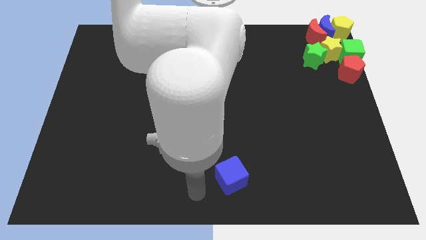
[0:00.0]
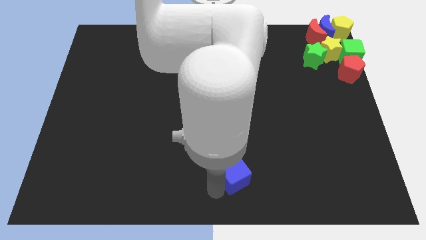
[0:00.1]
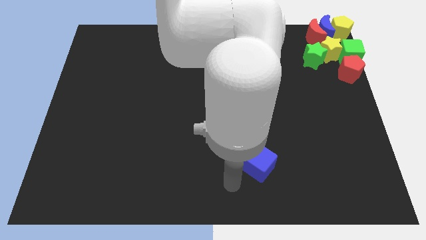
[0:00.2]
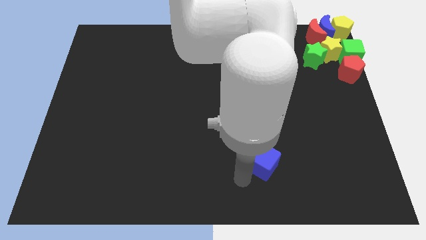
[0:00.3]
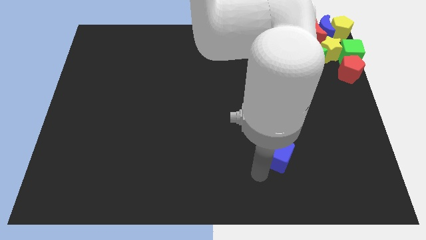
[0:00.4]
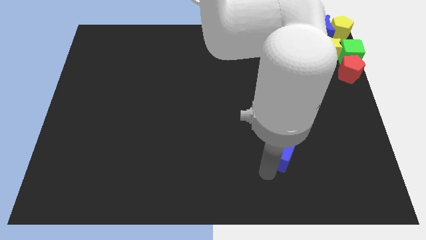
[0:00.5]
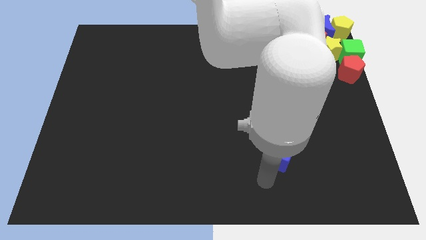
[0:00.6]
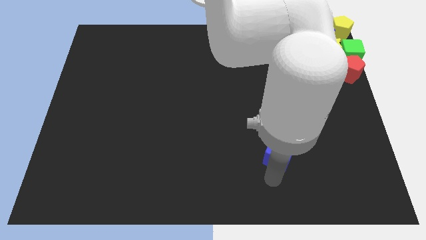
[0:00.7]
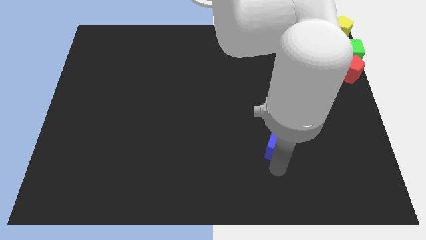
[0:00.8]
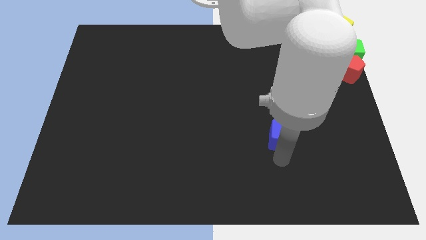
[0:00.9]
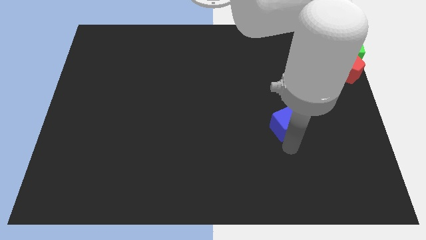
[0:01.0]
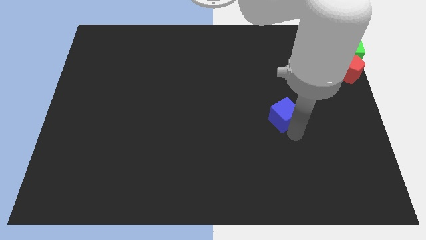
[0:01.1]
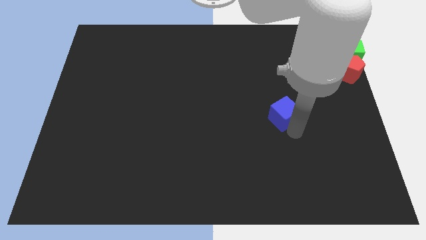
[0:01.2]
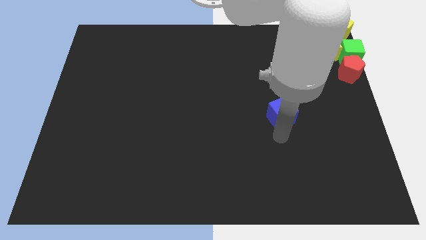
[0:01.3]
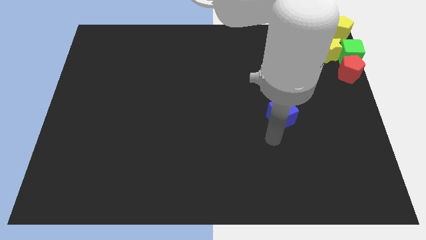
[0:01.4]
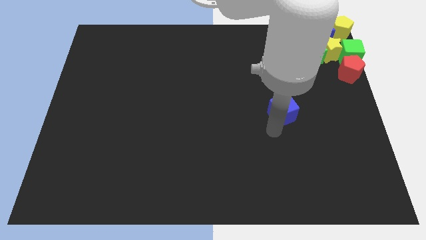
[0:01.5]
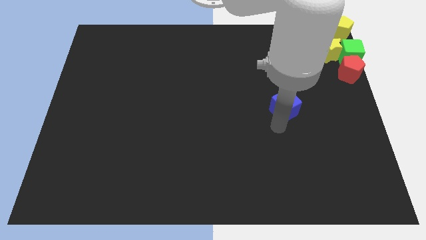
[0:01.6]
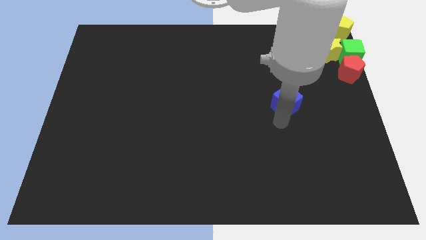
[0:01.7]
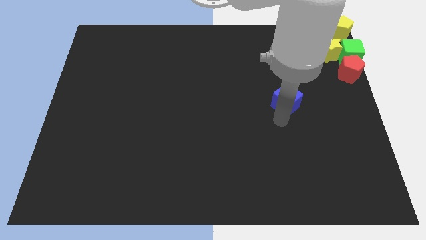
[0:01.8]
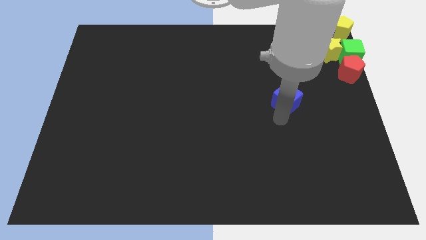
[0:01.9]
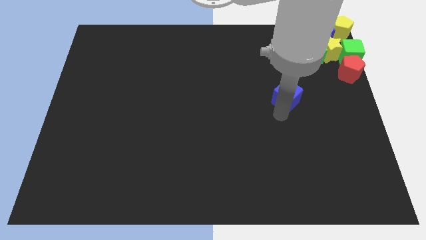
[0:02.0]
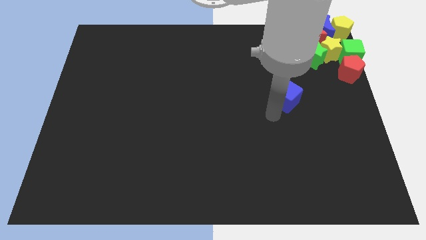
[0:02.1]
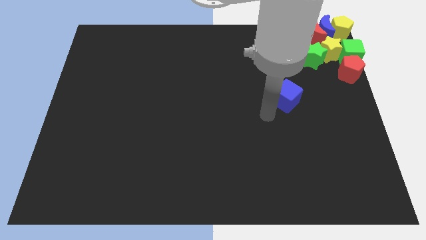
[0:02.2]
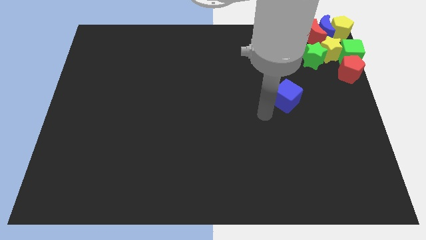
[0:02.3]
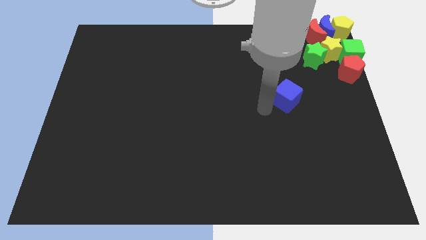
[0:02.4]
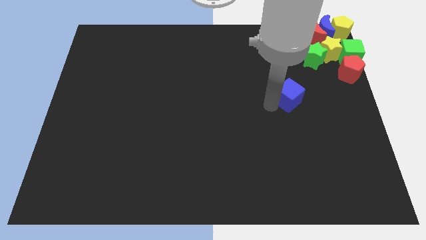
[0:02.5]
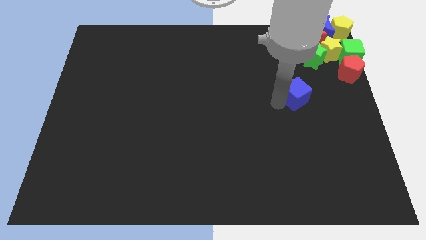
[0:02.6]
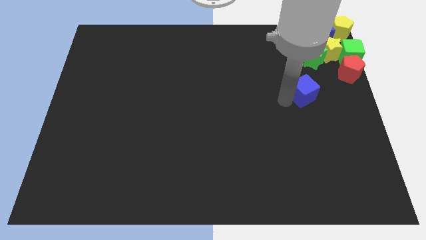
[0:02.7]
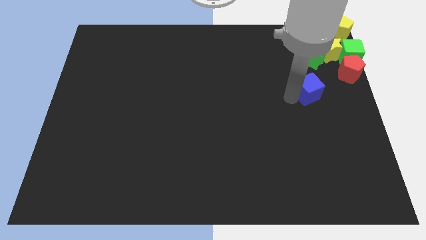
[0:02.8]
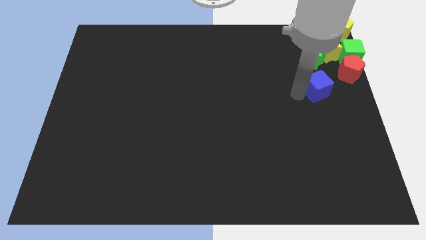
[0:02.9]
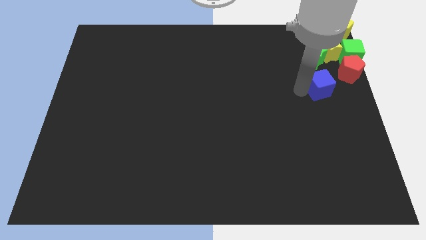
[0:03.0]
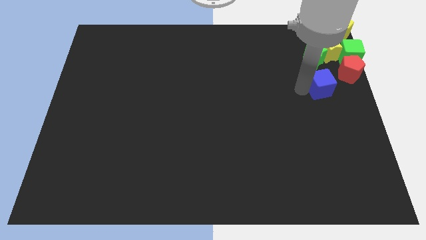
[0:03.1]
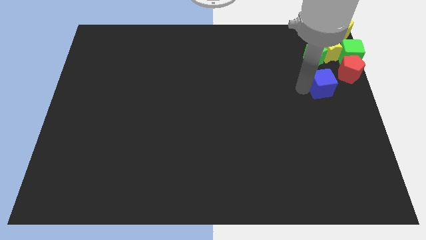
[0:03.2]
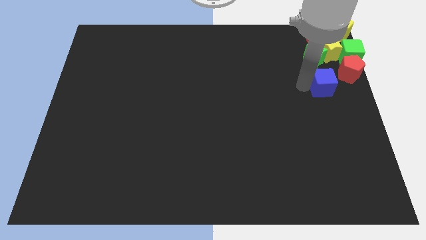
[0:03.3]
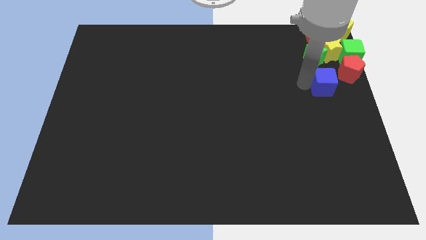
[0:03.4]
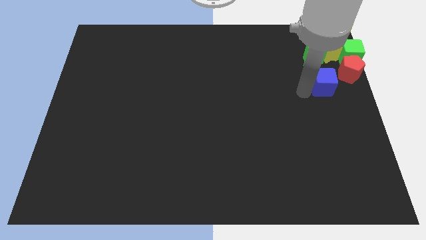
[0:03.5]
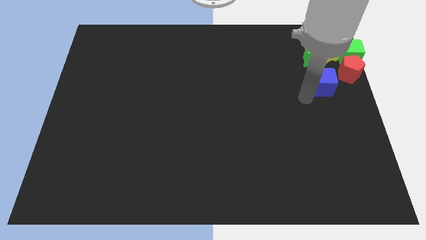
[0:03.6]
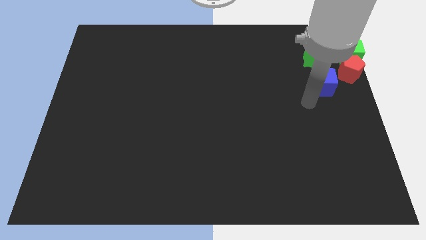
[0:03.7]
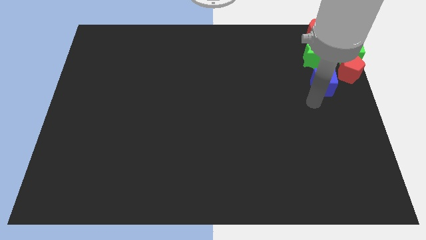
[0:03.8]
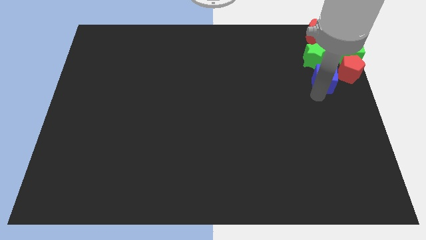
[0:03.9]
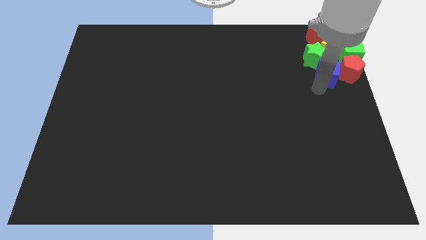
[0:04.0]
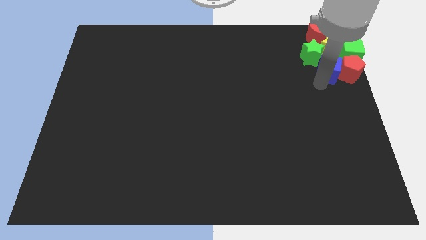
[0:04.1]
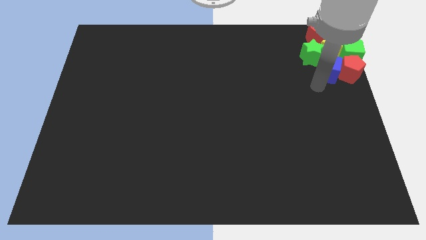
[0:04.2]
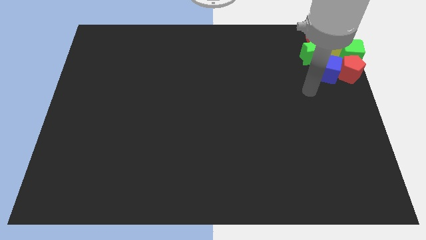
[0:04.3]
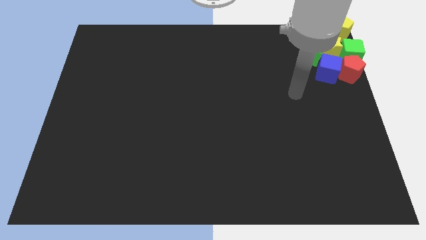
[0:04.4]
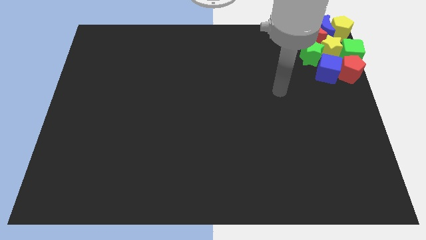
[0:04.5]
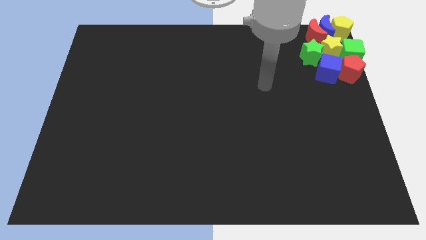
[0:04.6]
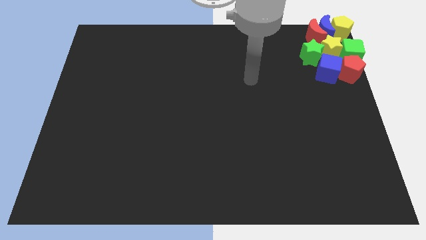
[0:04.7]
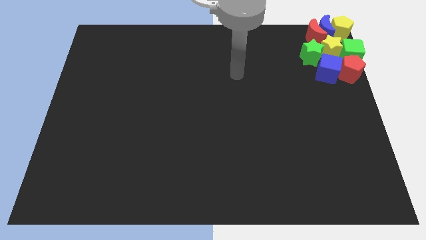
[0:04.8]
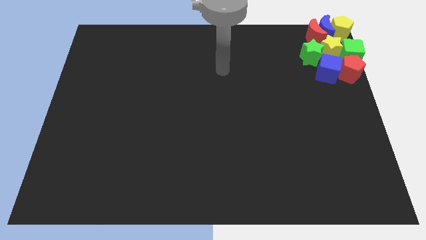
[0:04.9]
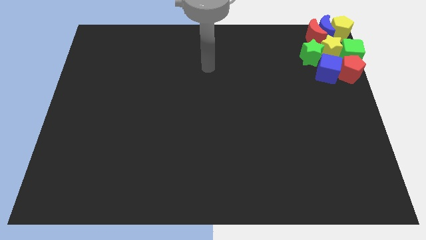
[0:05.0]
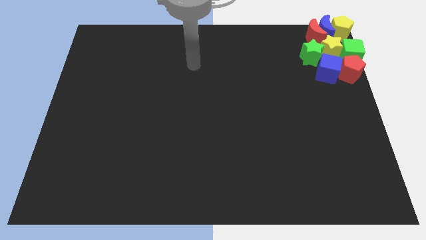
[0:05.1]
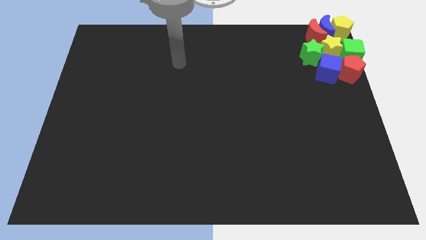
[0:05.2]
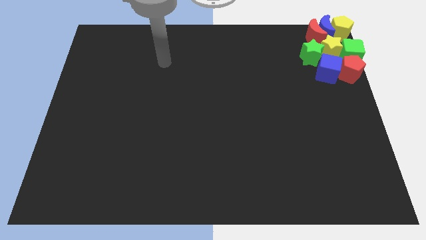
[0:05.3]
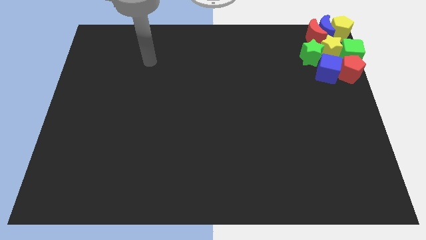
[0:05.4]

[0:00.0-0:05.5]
place the blue cube into the group of blocks

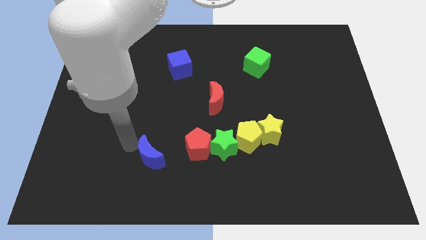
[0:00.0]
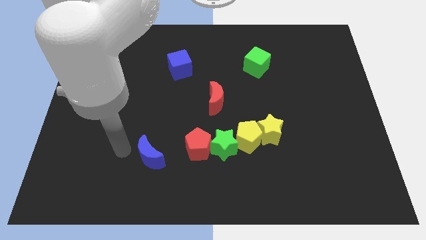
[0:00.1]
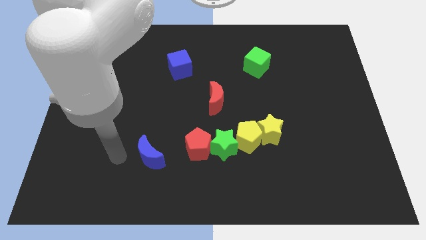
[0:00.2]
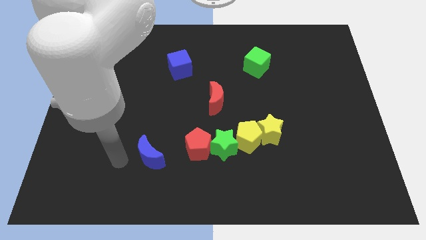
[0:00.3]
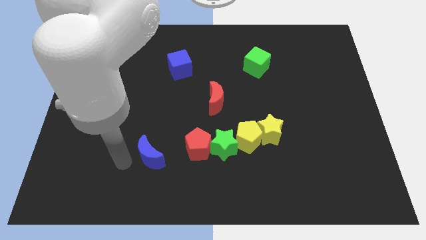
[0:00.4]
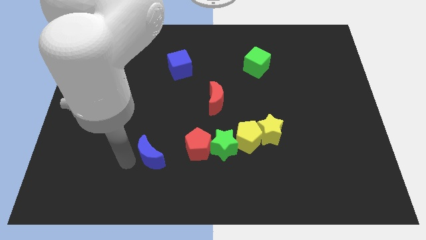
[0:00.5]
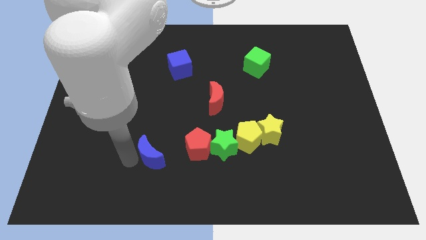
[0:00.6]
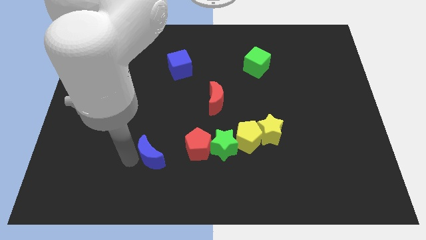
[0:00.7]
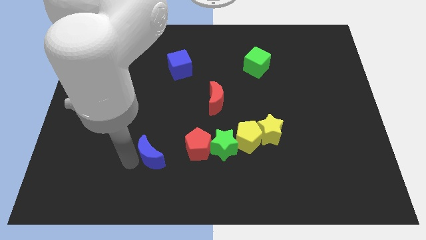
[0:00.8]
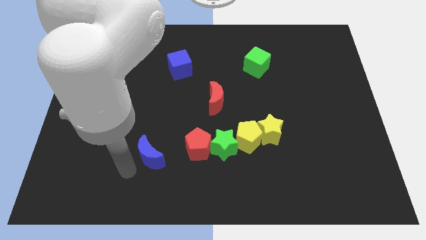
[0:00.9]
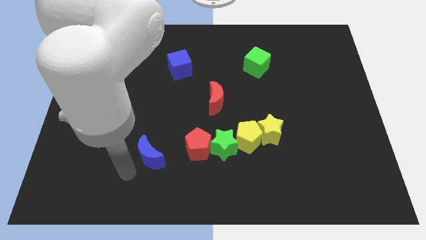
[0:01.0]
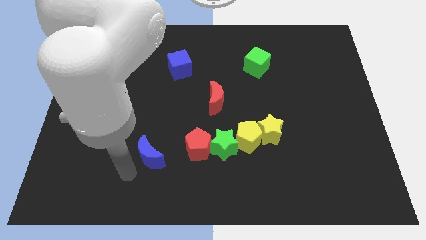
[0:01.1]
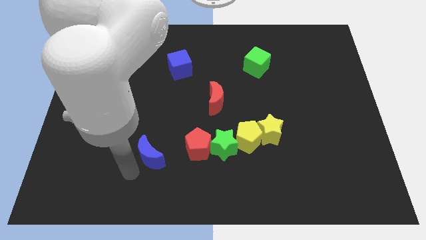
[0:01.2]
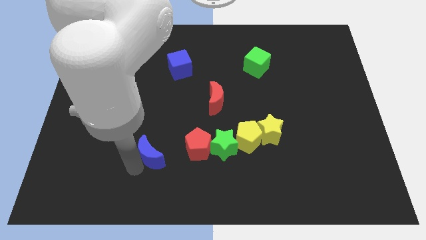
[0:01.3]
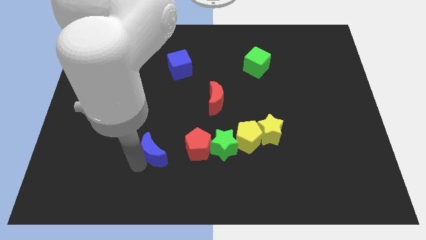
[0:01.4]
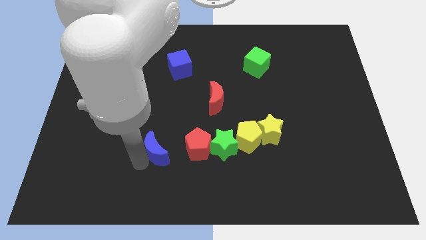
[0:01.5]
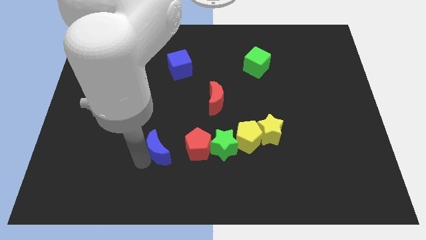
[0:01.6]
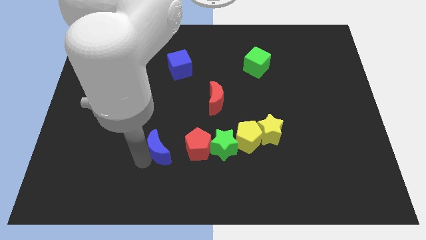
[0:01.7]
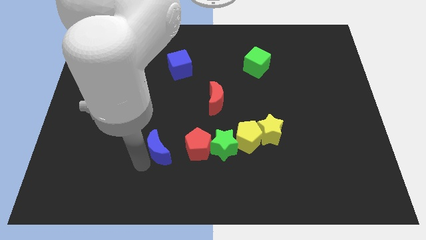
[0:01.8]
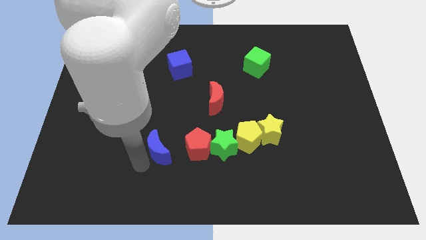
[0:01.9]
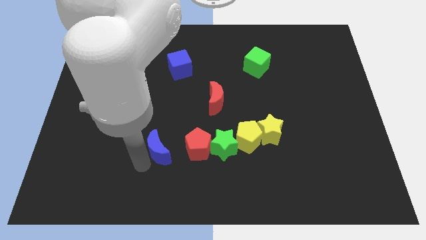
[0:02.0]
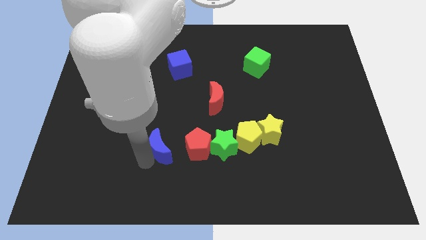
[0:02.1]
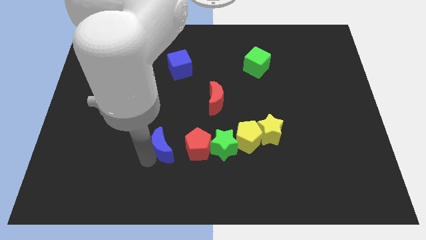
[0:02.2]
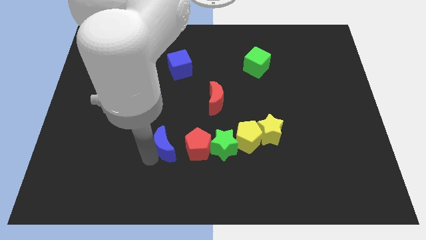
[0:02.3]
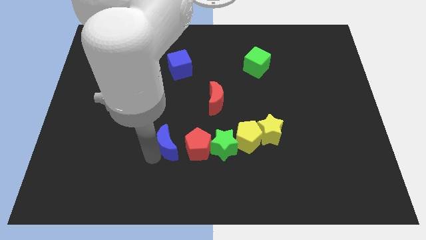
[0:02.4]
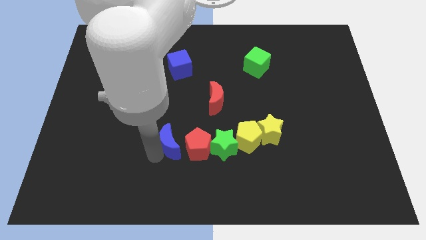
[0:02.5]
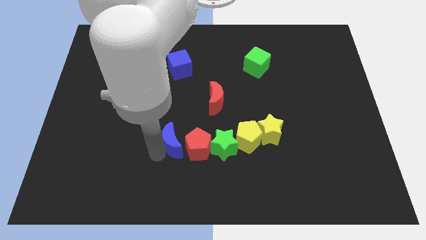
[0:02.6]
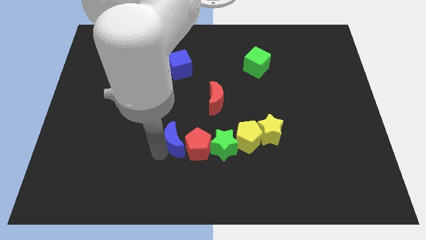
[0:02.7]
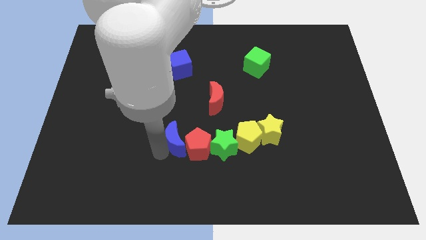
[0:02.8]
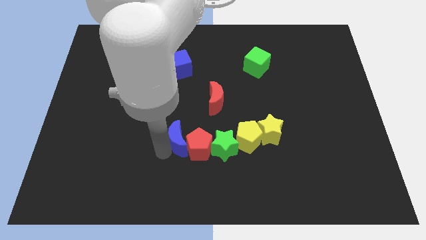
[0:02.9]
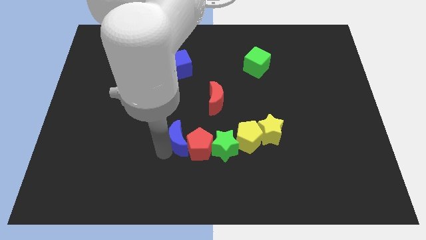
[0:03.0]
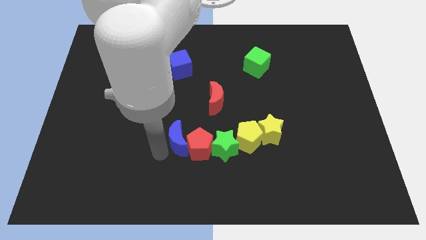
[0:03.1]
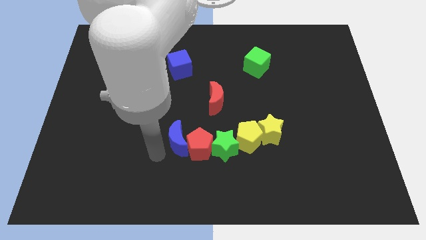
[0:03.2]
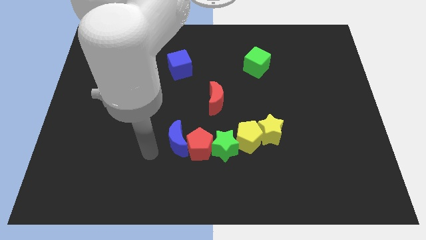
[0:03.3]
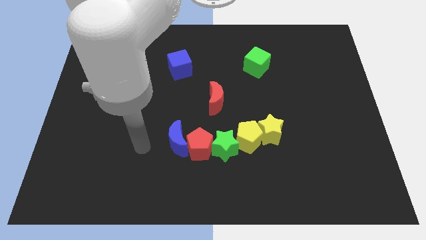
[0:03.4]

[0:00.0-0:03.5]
push blue crescent into red pentagon
